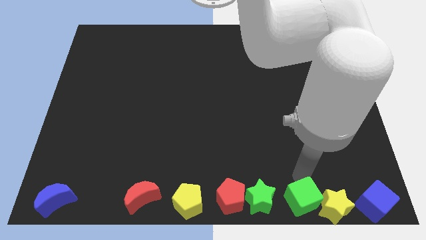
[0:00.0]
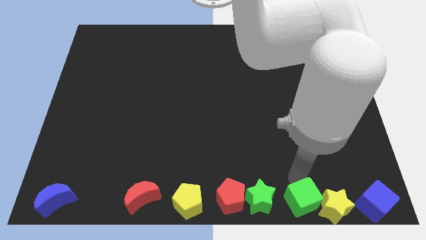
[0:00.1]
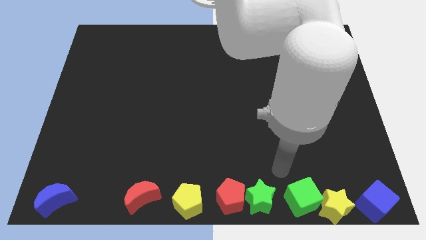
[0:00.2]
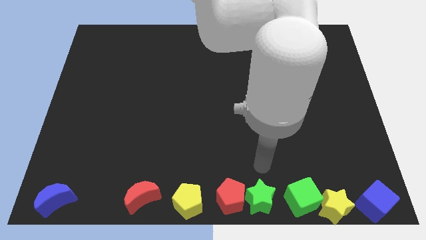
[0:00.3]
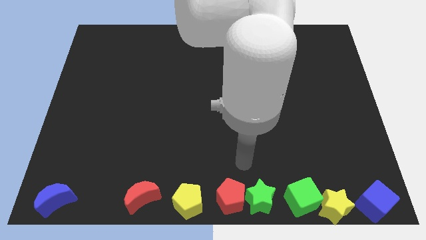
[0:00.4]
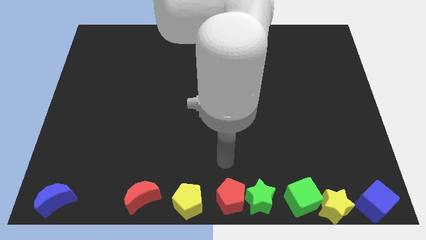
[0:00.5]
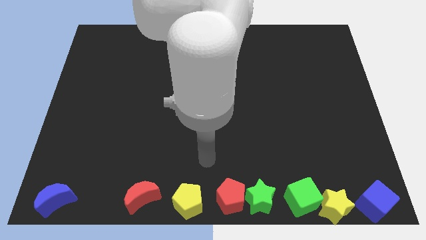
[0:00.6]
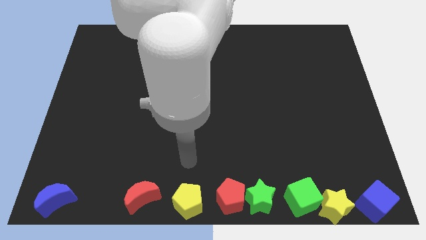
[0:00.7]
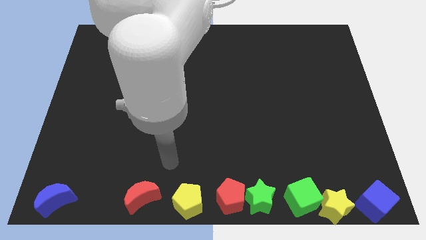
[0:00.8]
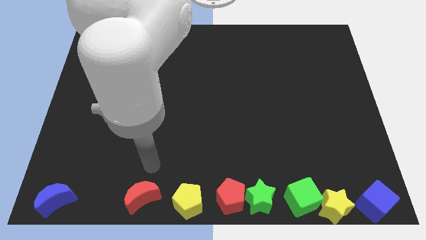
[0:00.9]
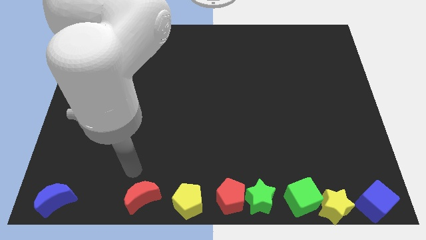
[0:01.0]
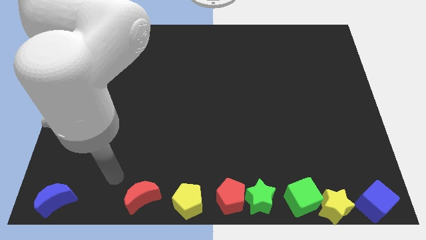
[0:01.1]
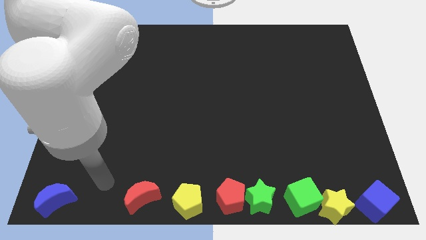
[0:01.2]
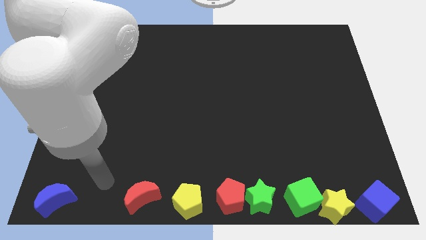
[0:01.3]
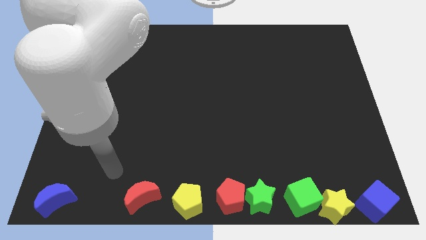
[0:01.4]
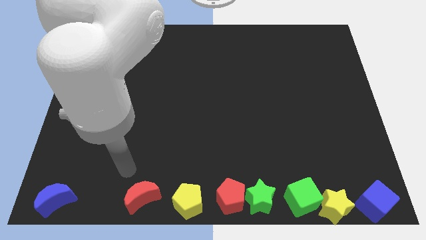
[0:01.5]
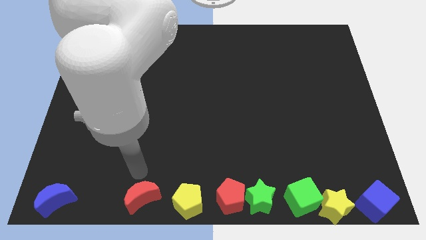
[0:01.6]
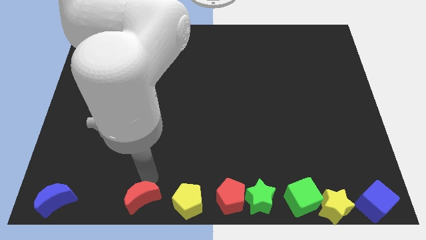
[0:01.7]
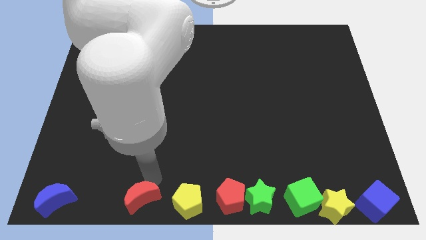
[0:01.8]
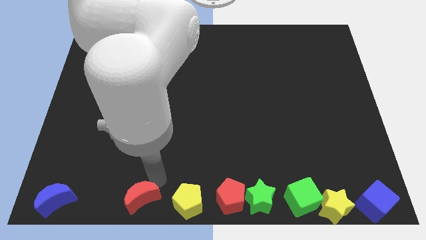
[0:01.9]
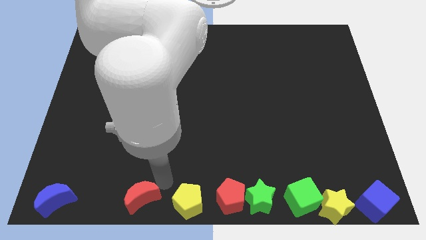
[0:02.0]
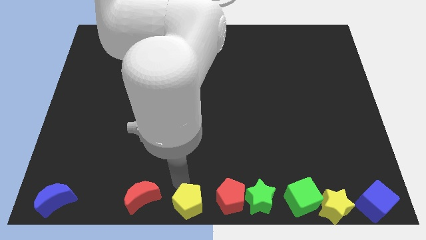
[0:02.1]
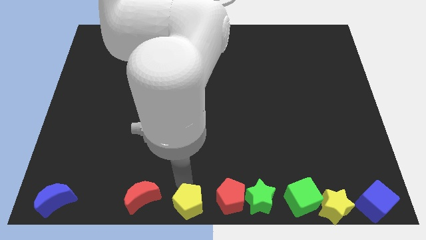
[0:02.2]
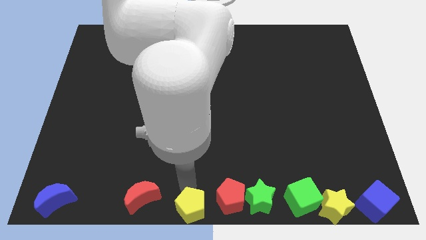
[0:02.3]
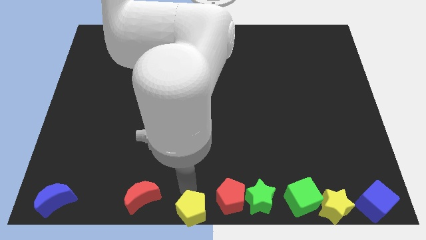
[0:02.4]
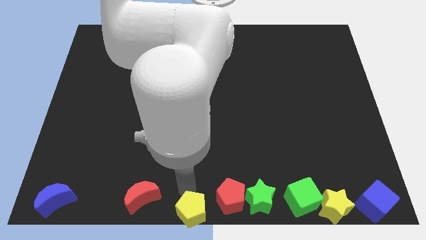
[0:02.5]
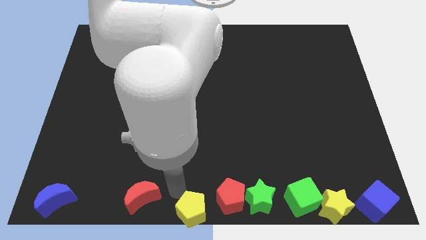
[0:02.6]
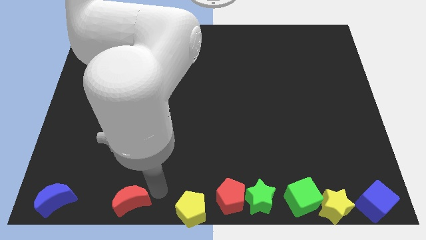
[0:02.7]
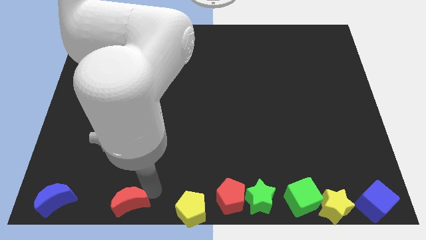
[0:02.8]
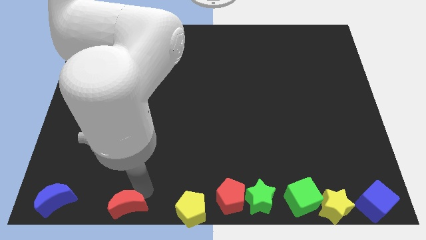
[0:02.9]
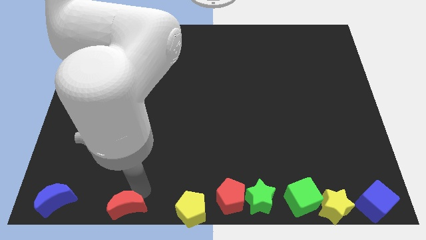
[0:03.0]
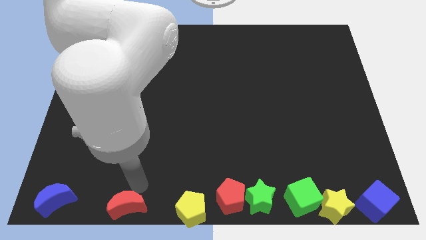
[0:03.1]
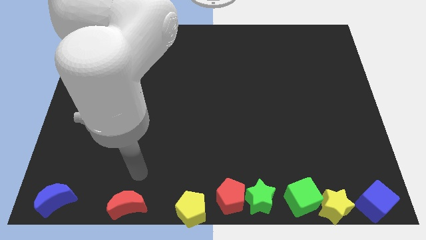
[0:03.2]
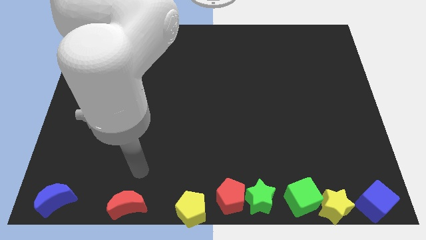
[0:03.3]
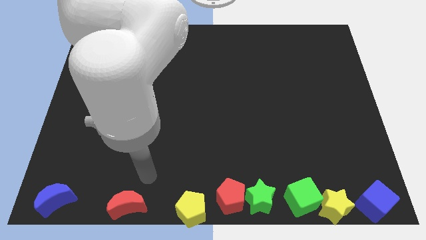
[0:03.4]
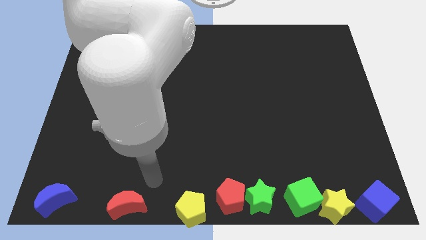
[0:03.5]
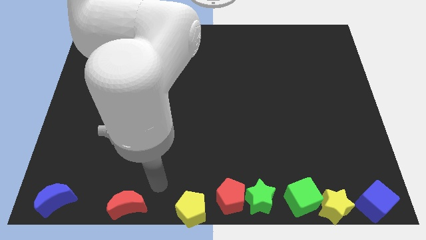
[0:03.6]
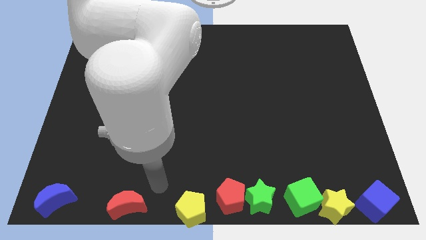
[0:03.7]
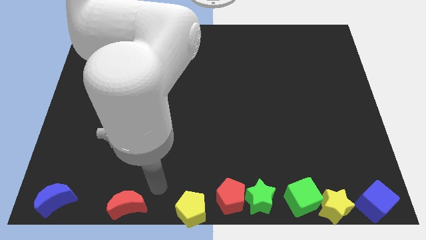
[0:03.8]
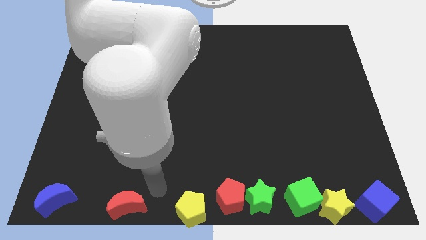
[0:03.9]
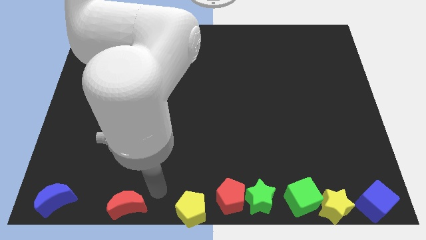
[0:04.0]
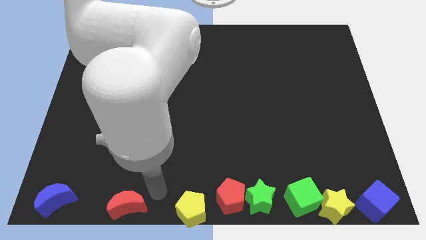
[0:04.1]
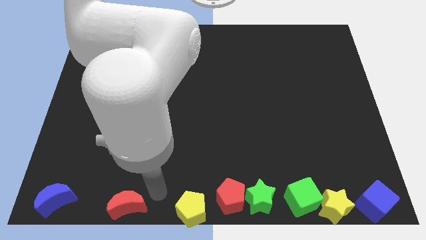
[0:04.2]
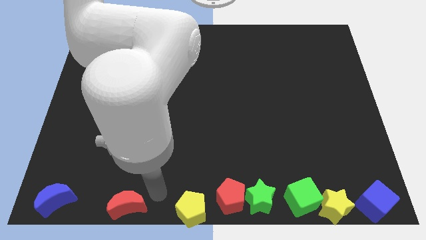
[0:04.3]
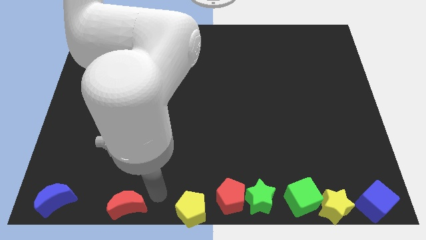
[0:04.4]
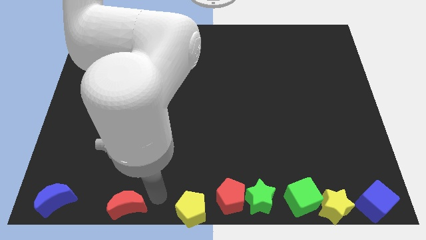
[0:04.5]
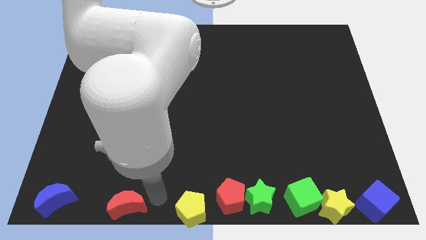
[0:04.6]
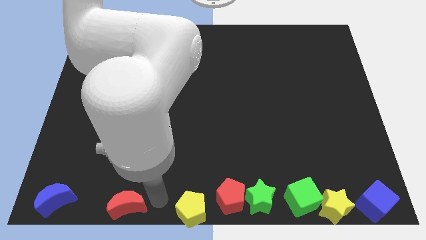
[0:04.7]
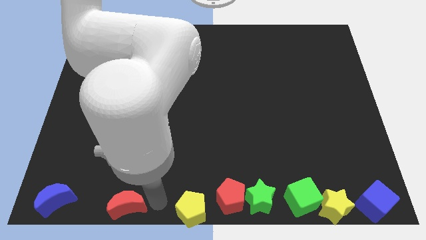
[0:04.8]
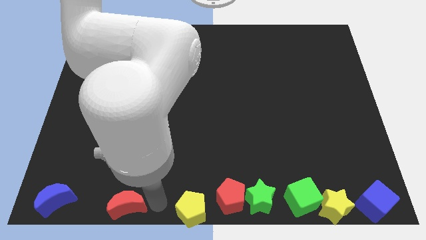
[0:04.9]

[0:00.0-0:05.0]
move your arm away from the green cube

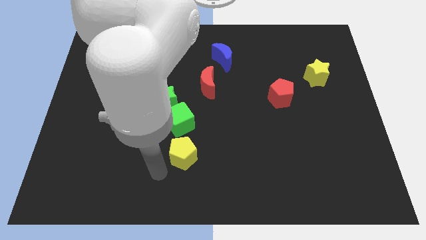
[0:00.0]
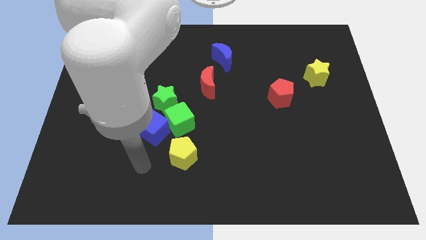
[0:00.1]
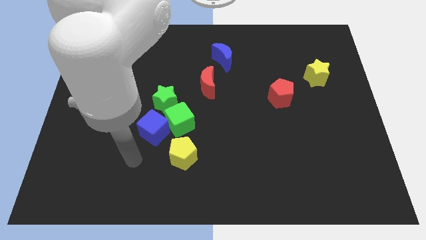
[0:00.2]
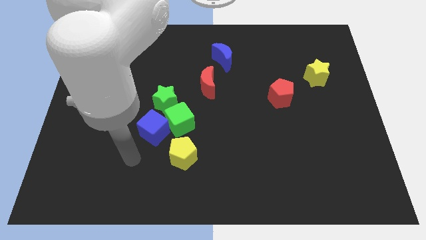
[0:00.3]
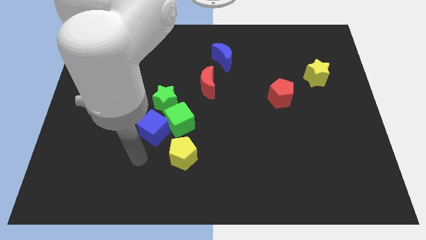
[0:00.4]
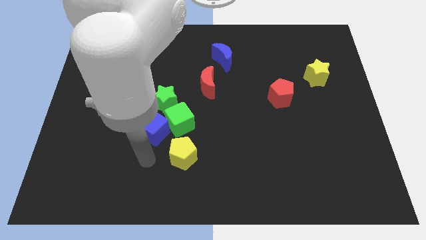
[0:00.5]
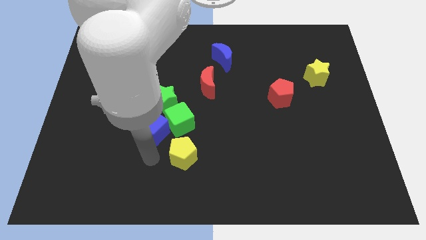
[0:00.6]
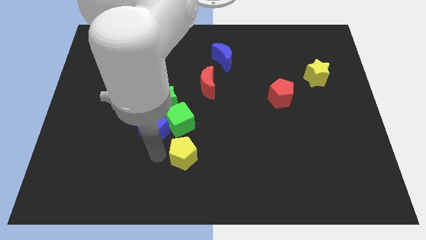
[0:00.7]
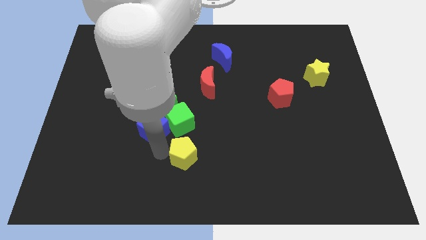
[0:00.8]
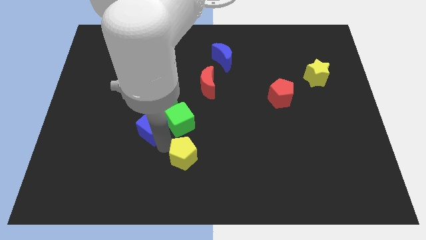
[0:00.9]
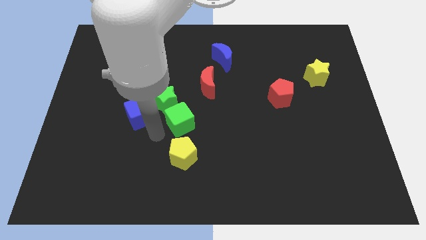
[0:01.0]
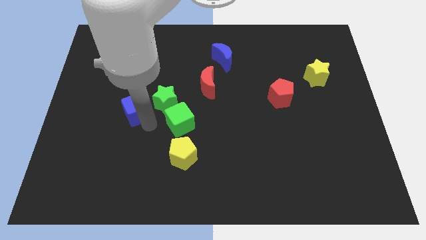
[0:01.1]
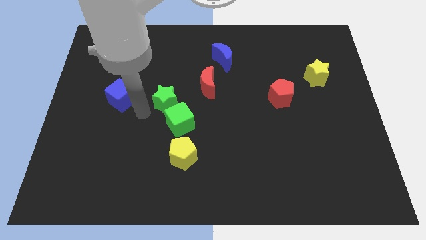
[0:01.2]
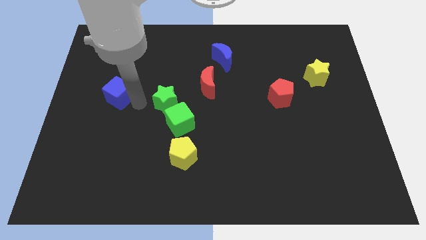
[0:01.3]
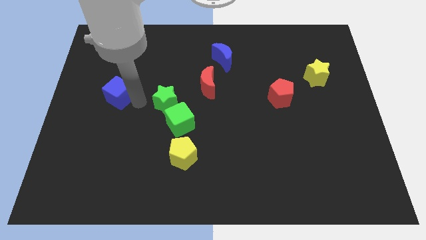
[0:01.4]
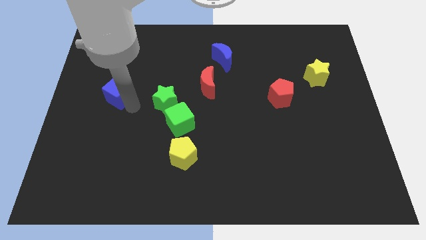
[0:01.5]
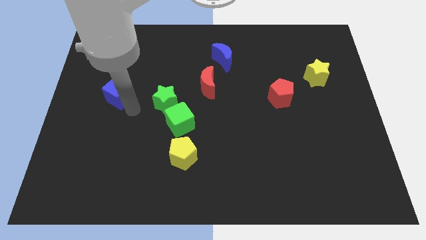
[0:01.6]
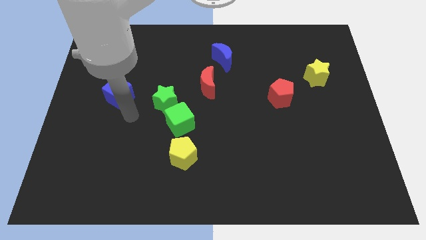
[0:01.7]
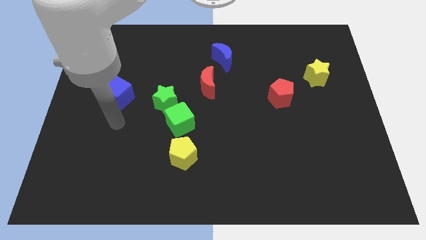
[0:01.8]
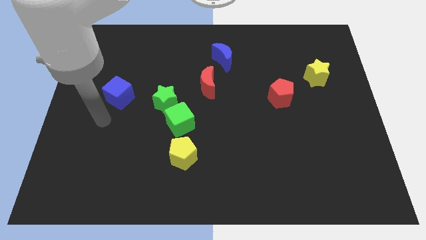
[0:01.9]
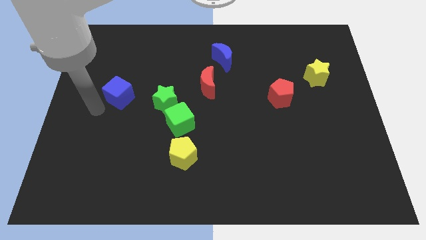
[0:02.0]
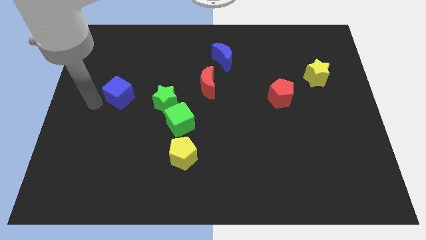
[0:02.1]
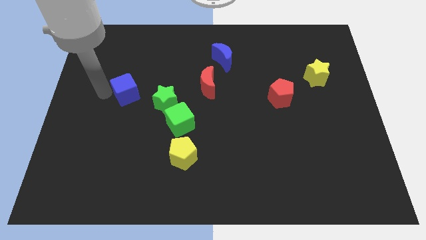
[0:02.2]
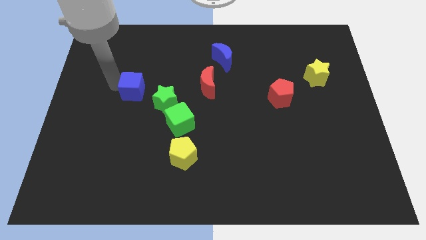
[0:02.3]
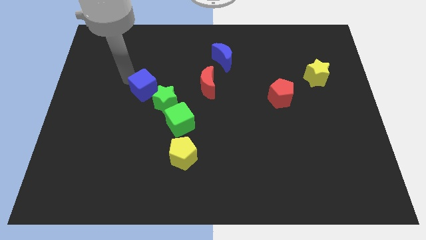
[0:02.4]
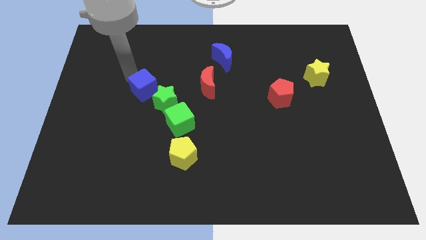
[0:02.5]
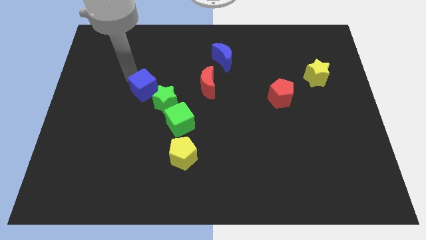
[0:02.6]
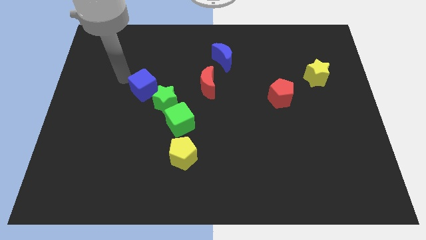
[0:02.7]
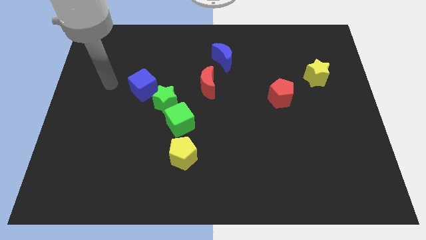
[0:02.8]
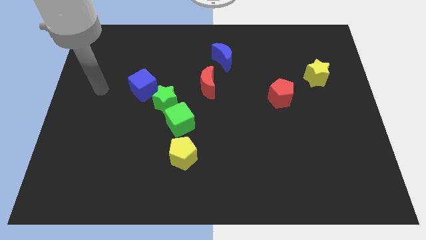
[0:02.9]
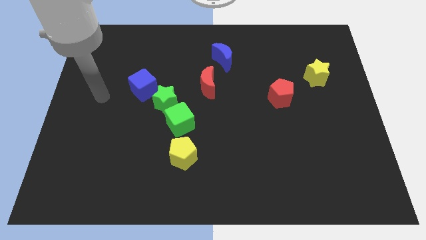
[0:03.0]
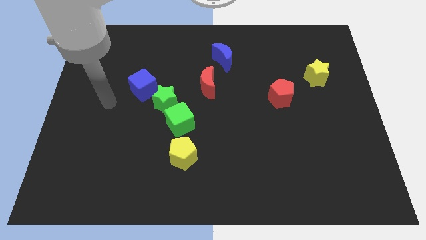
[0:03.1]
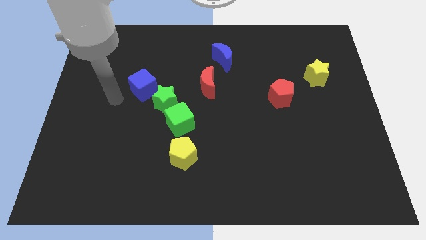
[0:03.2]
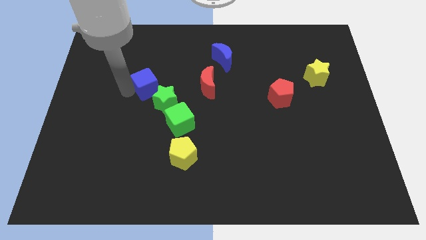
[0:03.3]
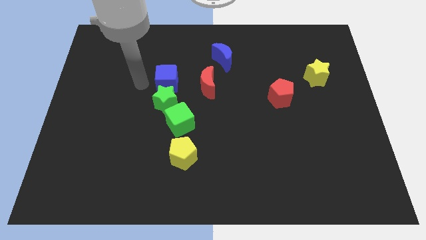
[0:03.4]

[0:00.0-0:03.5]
move the blue cube above the green star

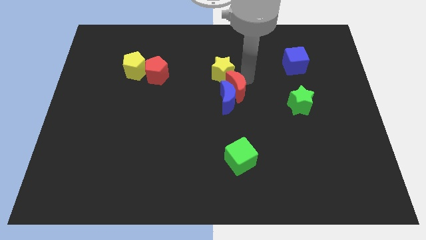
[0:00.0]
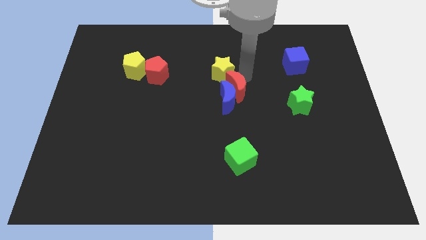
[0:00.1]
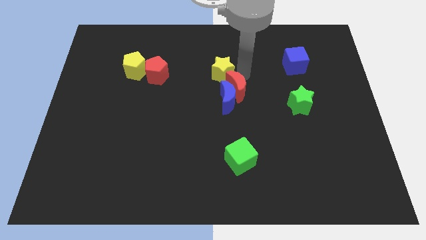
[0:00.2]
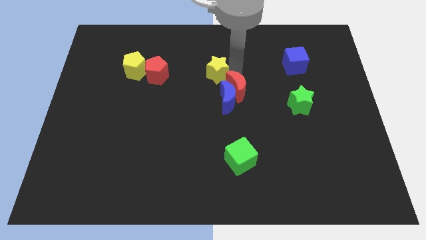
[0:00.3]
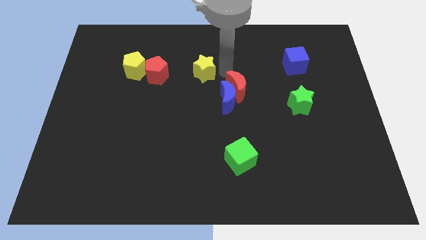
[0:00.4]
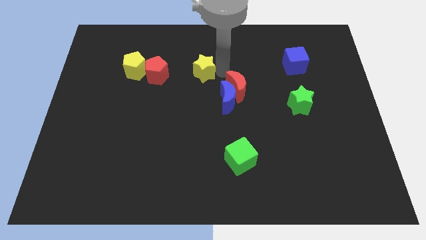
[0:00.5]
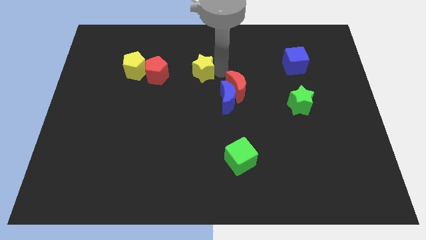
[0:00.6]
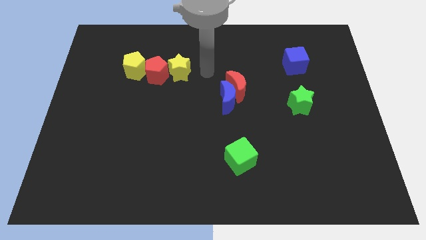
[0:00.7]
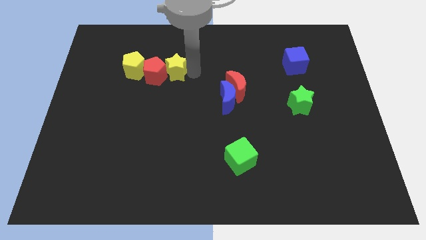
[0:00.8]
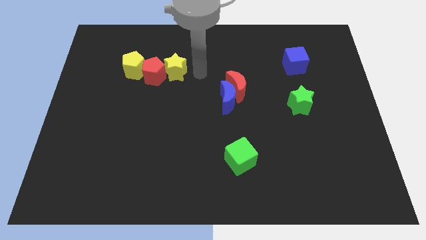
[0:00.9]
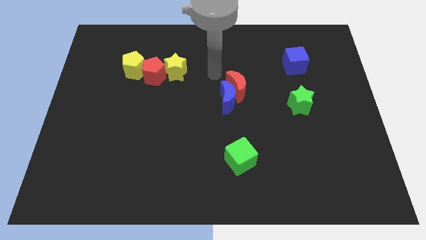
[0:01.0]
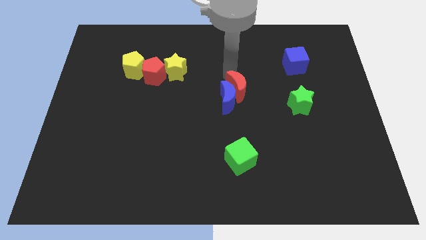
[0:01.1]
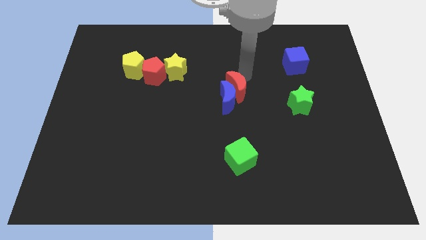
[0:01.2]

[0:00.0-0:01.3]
place yellow star beside red pentagon
